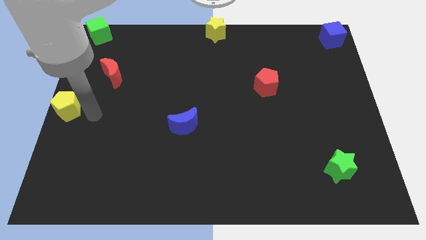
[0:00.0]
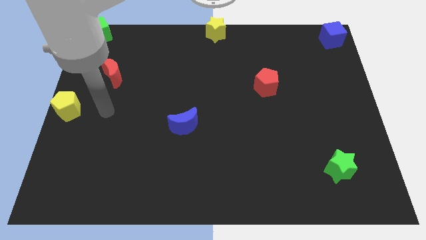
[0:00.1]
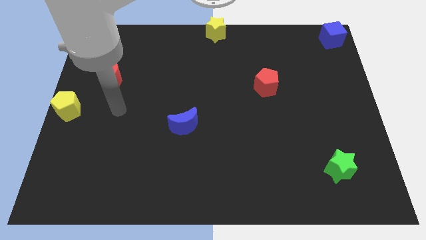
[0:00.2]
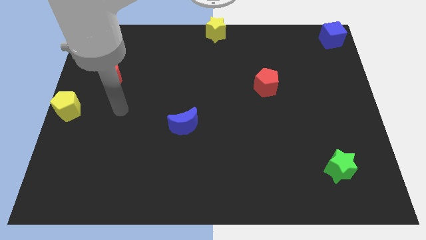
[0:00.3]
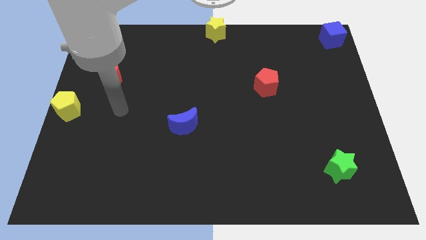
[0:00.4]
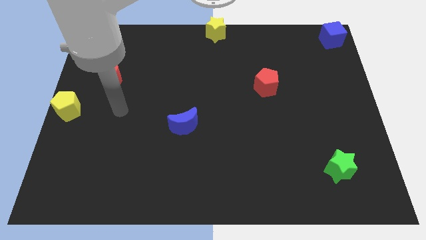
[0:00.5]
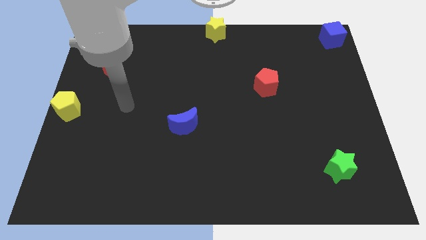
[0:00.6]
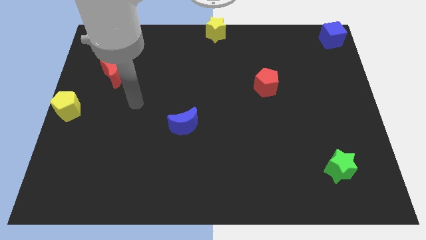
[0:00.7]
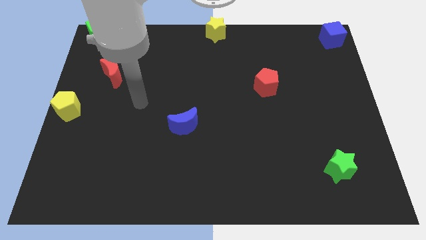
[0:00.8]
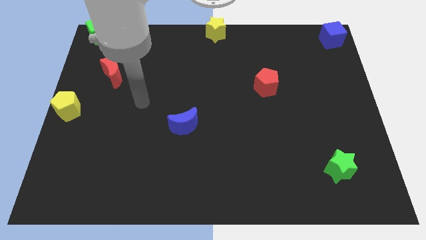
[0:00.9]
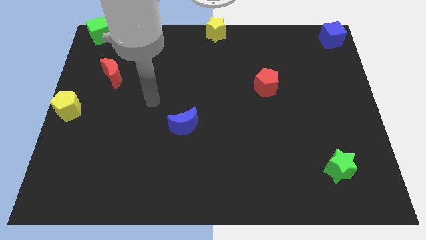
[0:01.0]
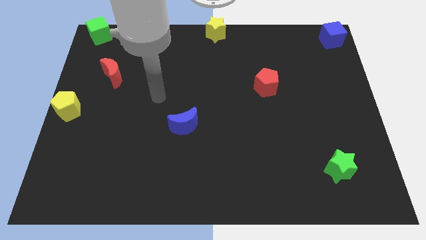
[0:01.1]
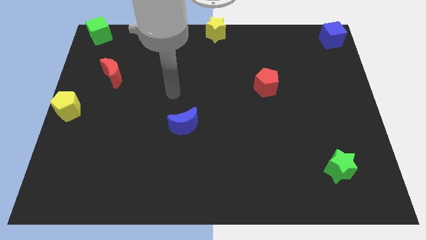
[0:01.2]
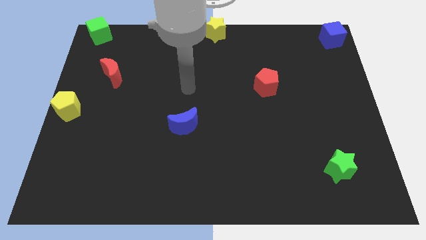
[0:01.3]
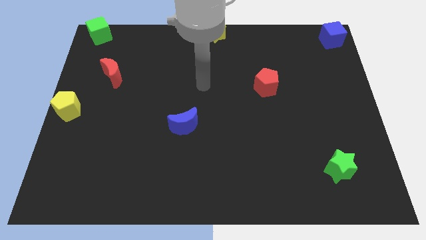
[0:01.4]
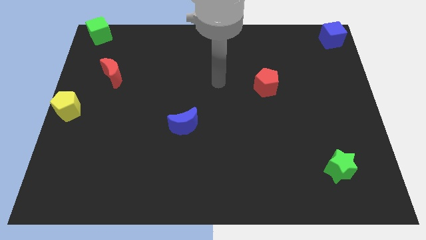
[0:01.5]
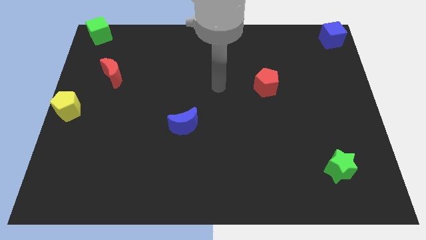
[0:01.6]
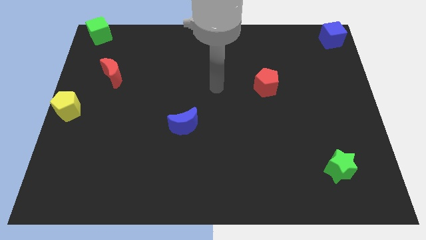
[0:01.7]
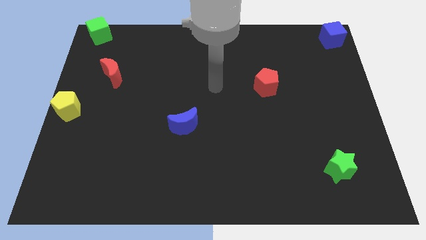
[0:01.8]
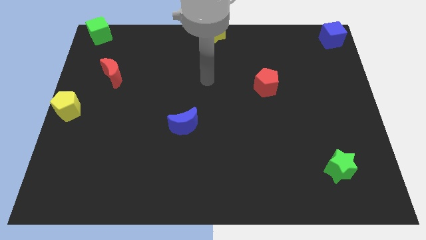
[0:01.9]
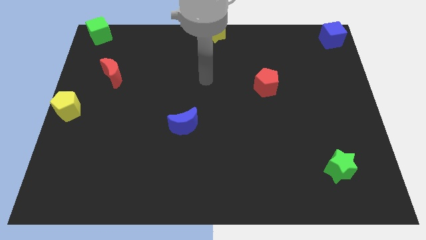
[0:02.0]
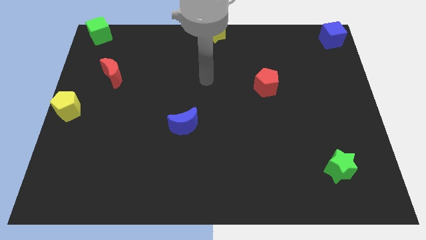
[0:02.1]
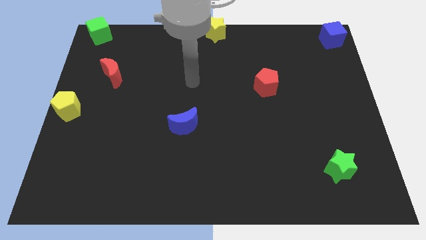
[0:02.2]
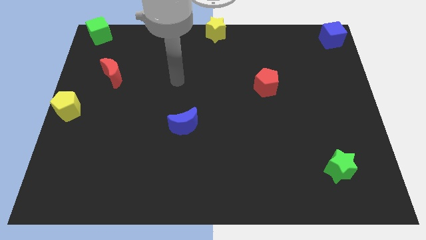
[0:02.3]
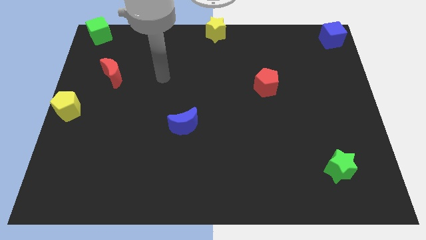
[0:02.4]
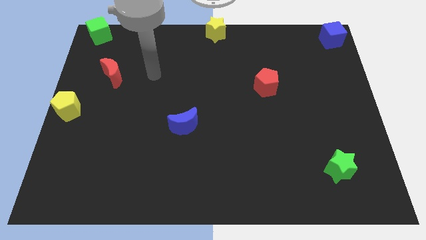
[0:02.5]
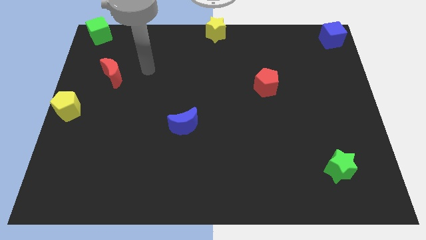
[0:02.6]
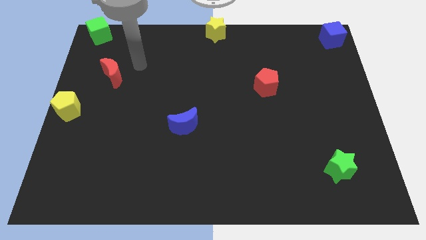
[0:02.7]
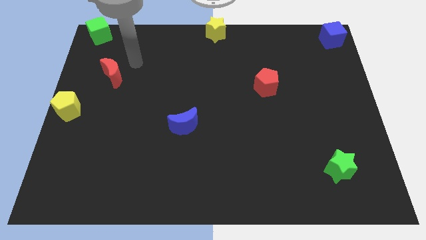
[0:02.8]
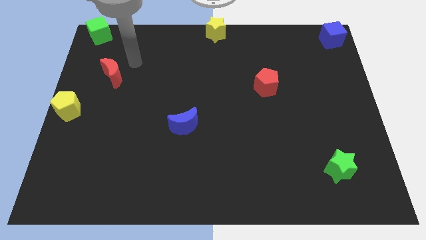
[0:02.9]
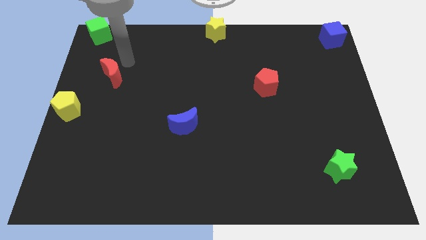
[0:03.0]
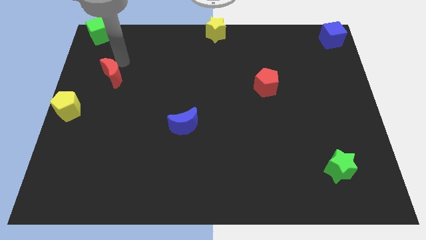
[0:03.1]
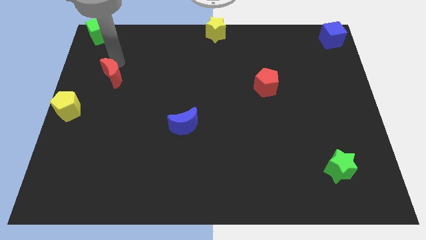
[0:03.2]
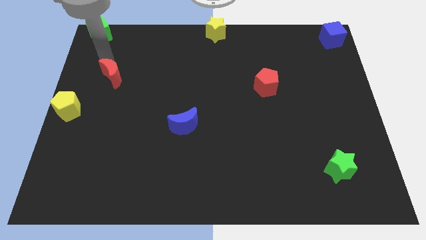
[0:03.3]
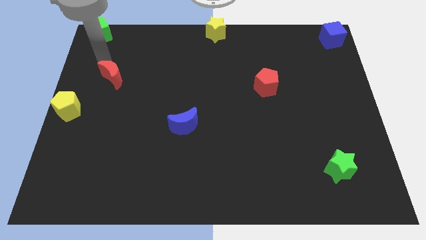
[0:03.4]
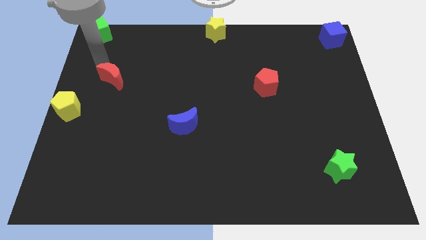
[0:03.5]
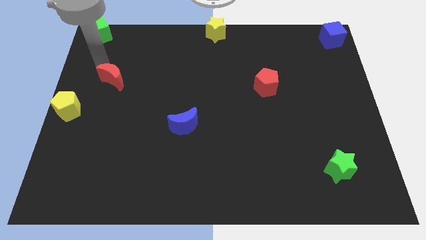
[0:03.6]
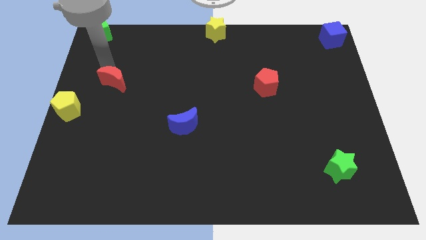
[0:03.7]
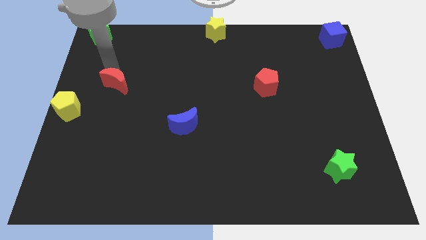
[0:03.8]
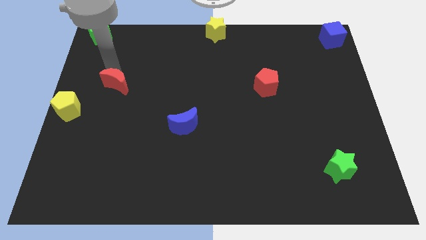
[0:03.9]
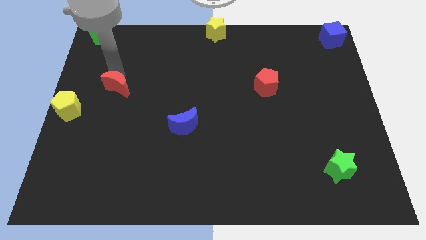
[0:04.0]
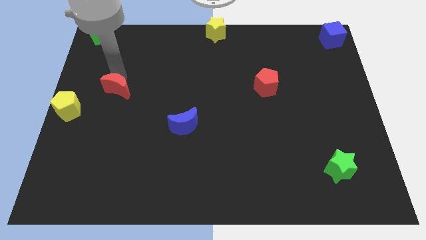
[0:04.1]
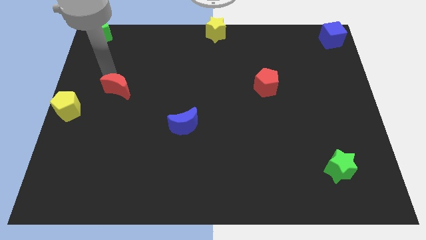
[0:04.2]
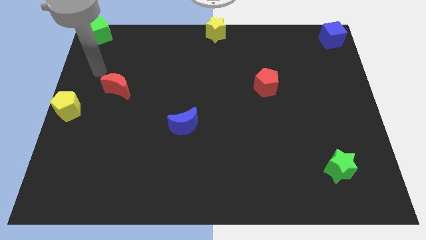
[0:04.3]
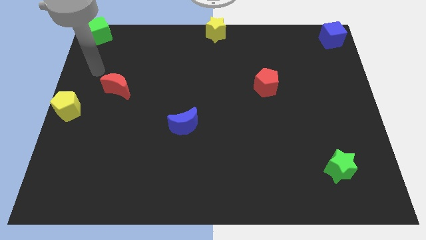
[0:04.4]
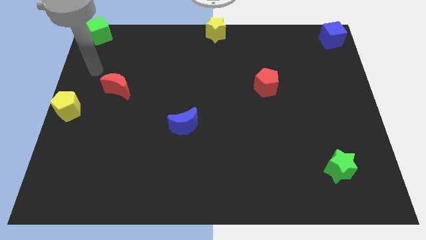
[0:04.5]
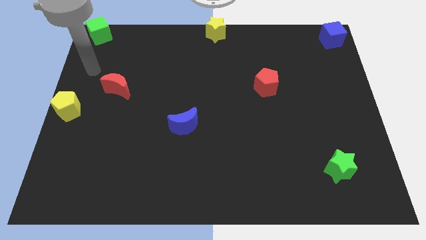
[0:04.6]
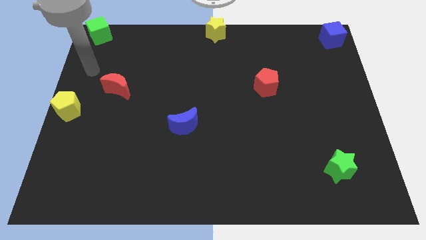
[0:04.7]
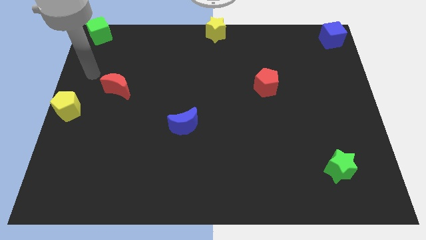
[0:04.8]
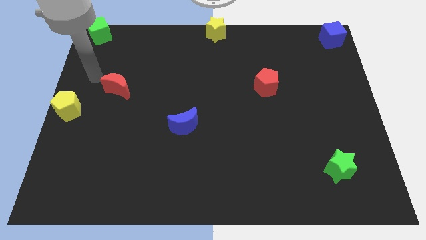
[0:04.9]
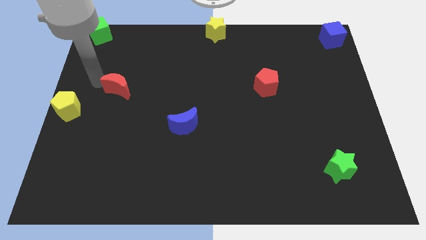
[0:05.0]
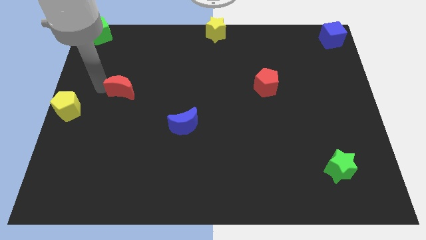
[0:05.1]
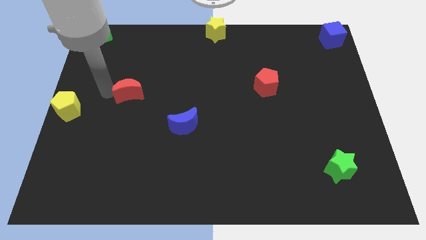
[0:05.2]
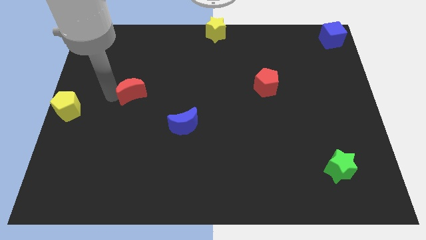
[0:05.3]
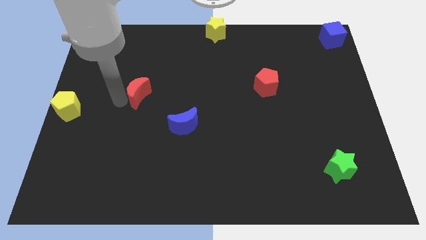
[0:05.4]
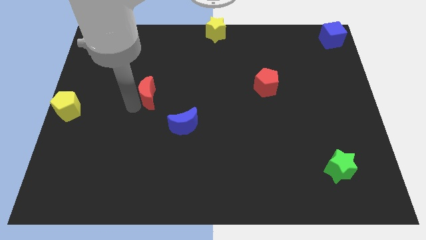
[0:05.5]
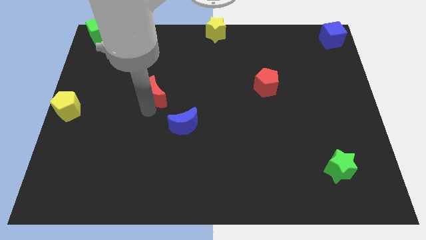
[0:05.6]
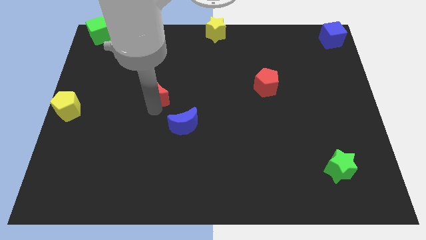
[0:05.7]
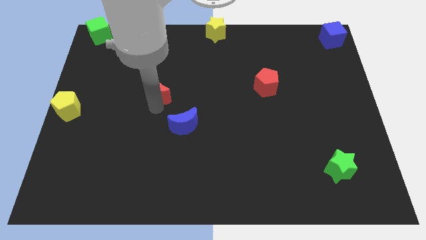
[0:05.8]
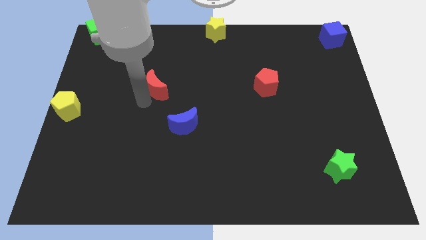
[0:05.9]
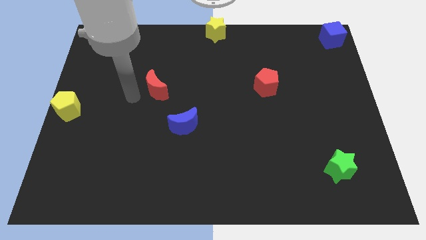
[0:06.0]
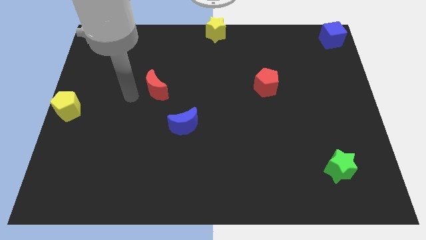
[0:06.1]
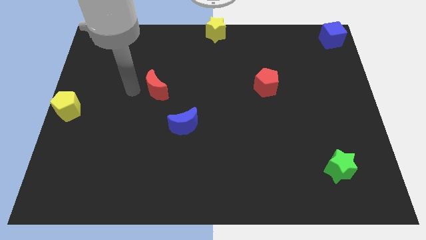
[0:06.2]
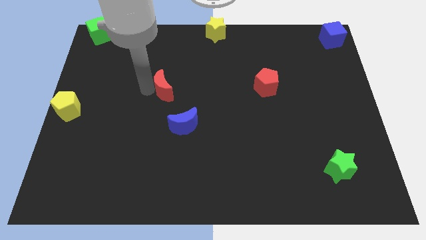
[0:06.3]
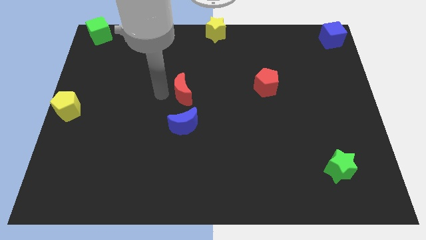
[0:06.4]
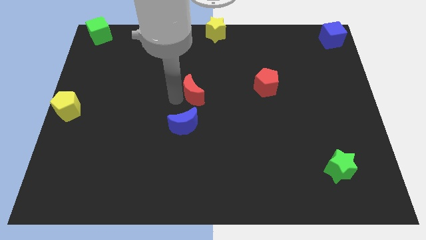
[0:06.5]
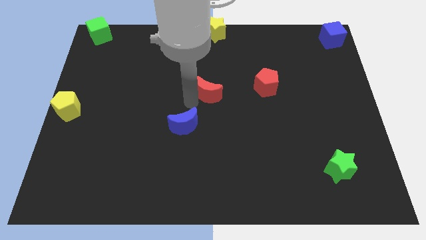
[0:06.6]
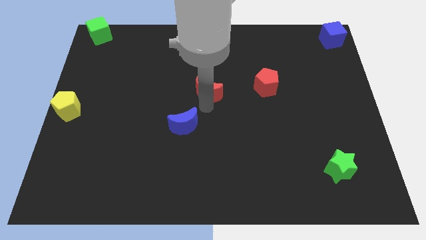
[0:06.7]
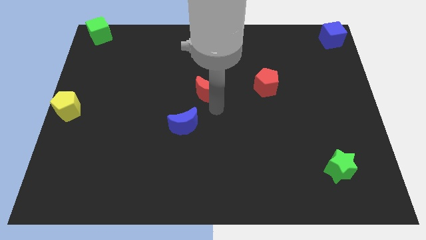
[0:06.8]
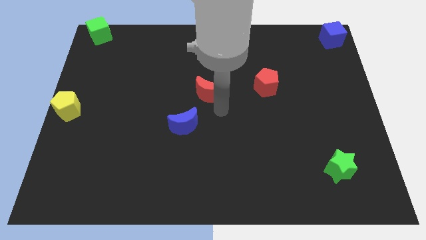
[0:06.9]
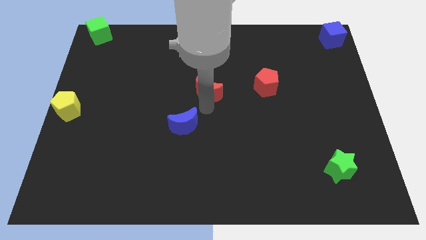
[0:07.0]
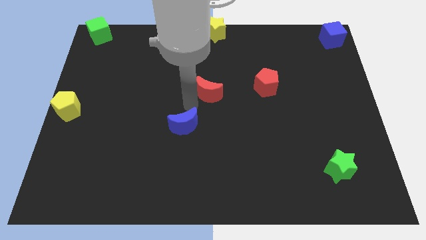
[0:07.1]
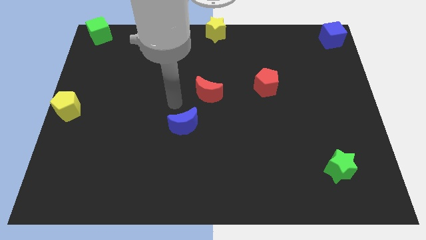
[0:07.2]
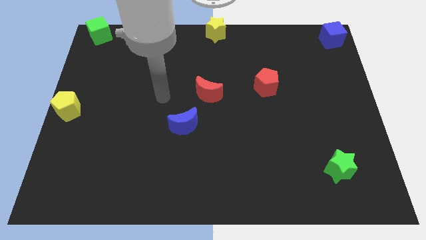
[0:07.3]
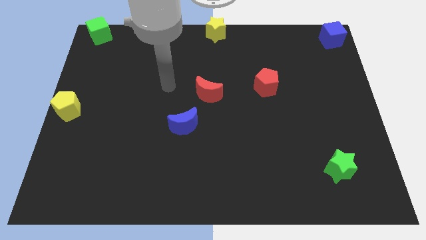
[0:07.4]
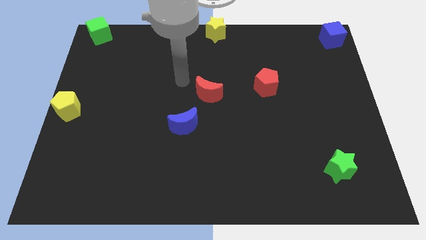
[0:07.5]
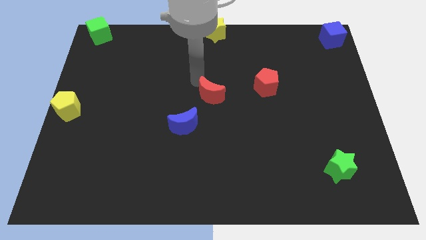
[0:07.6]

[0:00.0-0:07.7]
place red crescent at the center of the board

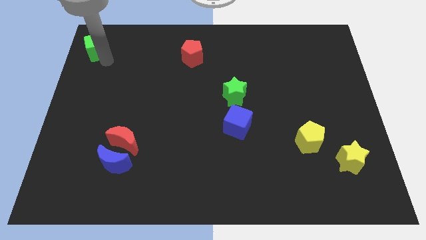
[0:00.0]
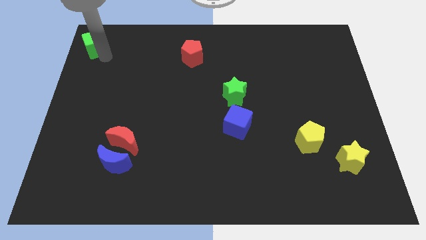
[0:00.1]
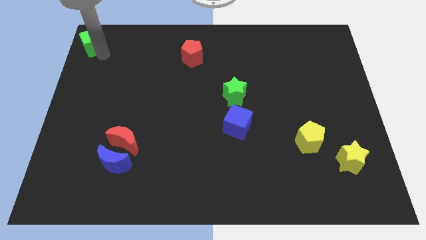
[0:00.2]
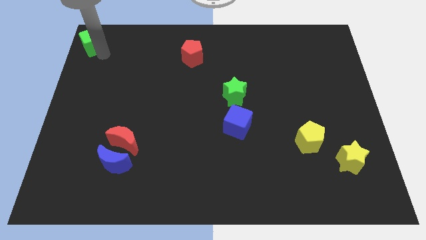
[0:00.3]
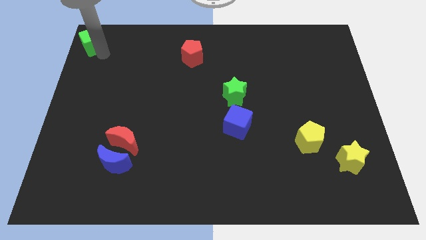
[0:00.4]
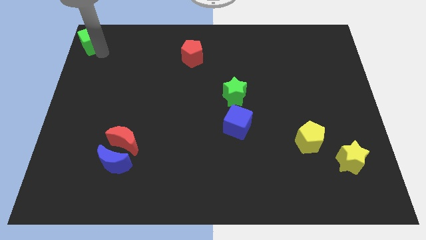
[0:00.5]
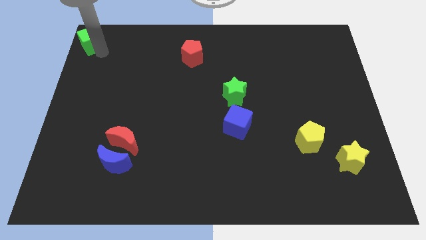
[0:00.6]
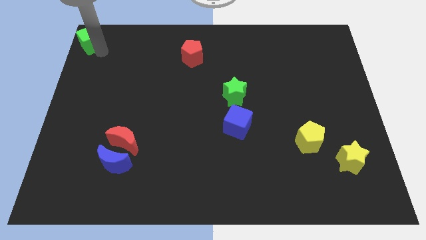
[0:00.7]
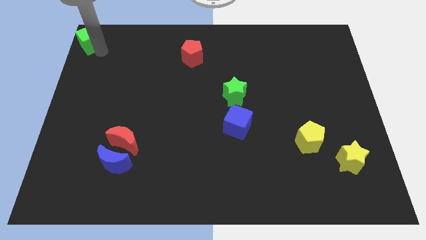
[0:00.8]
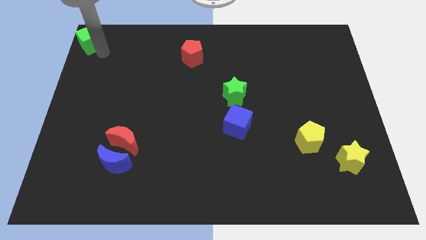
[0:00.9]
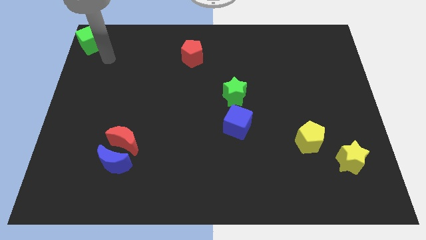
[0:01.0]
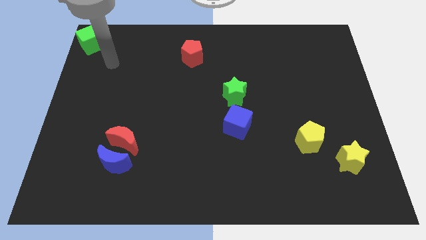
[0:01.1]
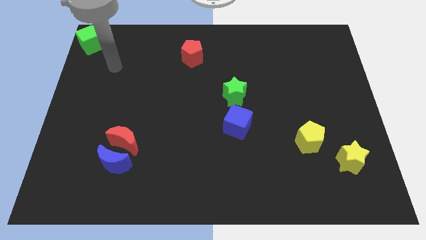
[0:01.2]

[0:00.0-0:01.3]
slightly push the green cube to the top left corner
